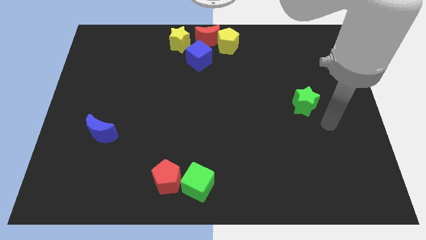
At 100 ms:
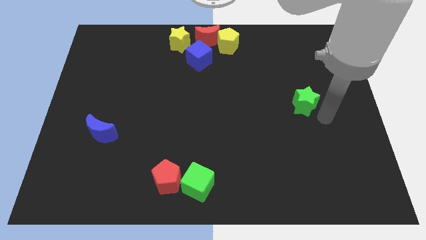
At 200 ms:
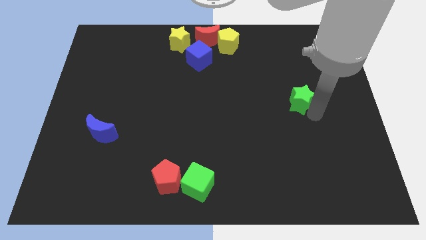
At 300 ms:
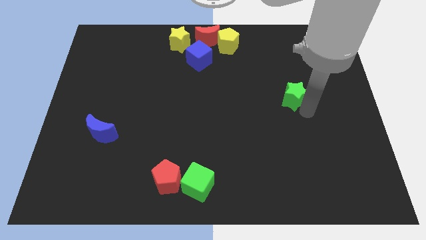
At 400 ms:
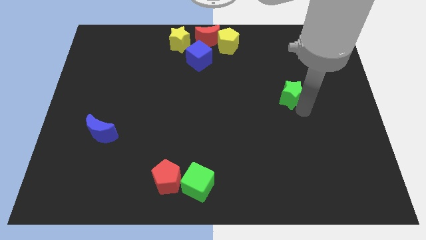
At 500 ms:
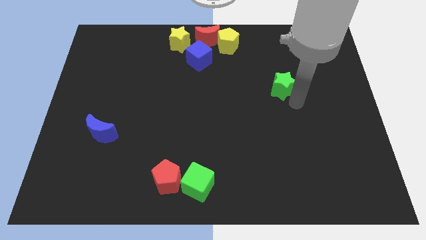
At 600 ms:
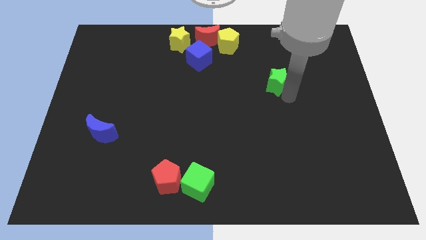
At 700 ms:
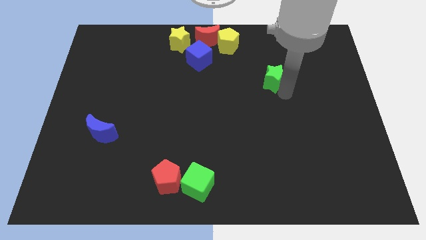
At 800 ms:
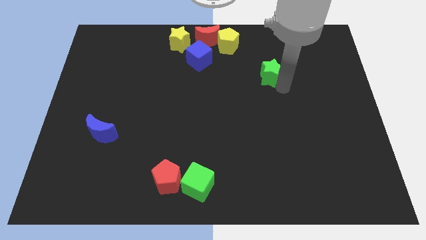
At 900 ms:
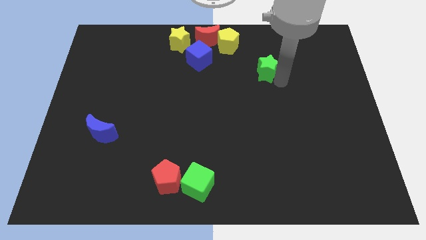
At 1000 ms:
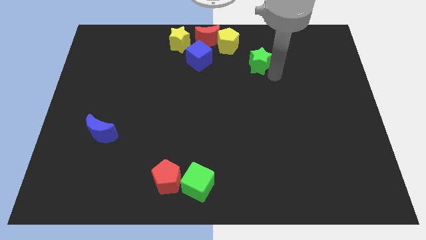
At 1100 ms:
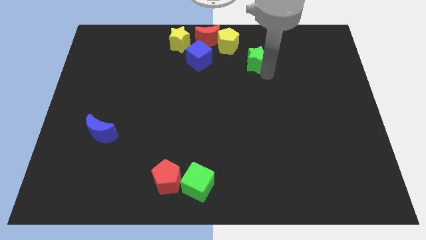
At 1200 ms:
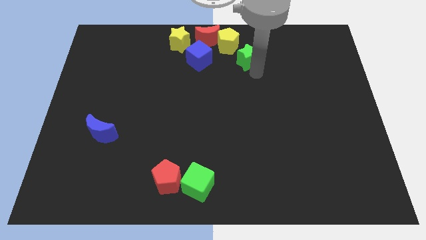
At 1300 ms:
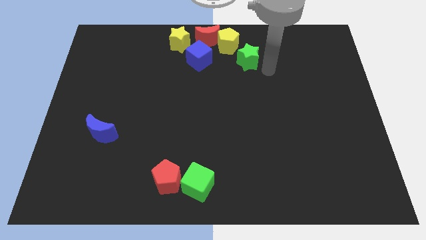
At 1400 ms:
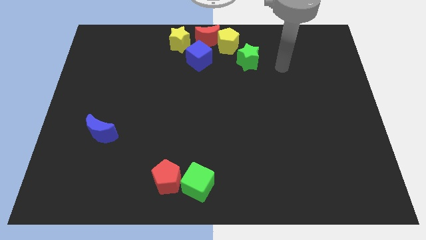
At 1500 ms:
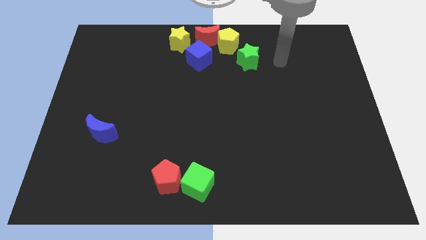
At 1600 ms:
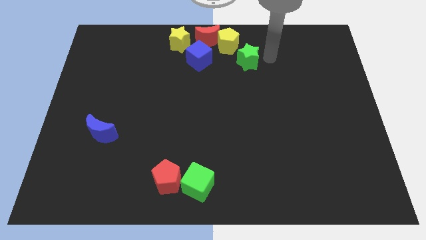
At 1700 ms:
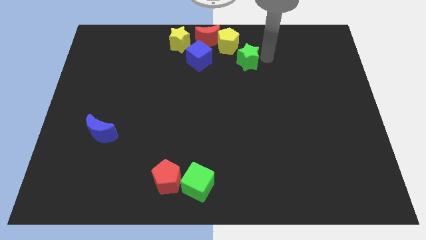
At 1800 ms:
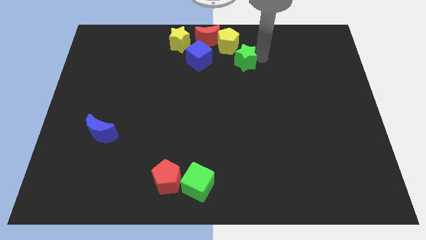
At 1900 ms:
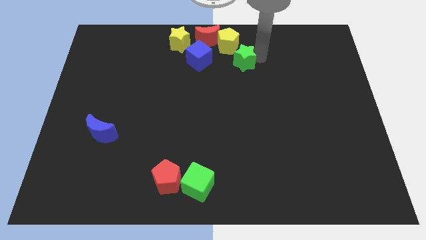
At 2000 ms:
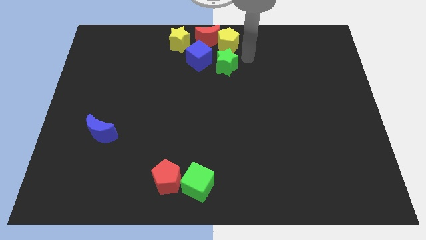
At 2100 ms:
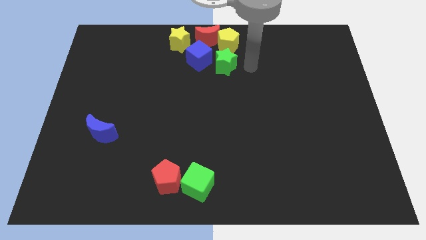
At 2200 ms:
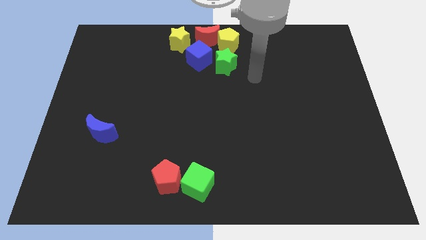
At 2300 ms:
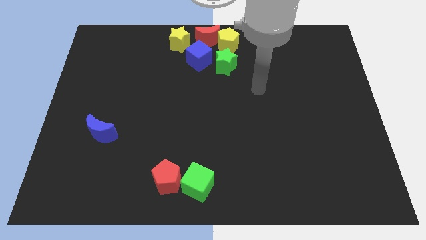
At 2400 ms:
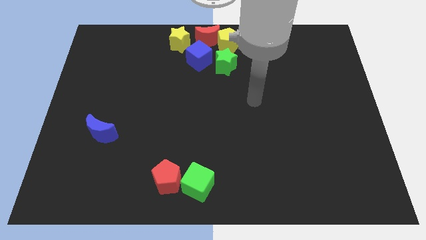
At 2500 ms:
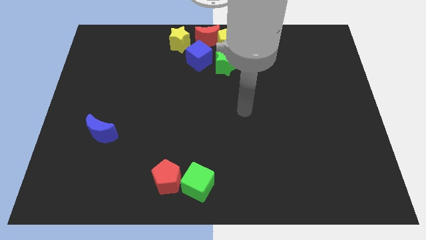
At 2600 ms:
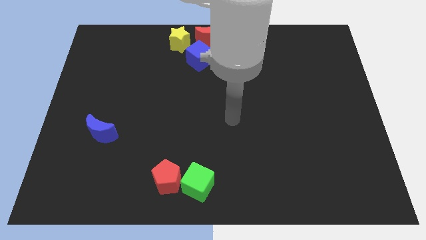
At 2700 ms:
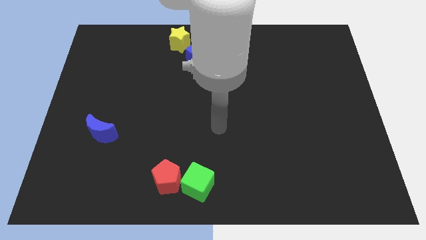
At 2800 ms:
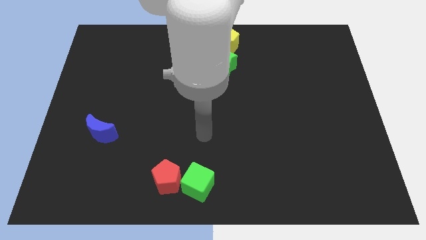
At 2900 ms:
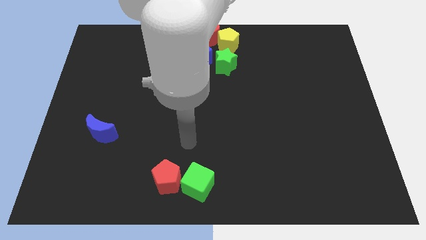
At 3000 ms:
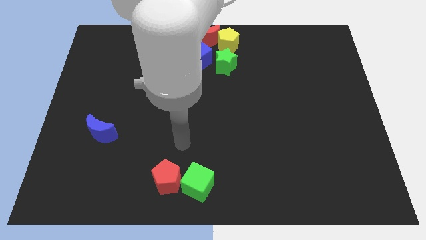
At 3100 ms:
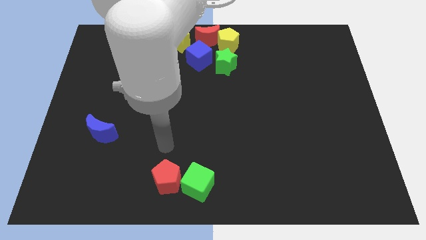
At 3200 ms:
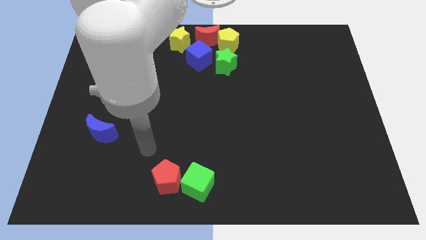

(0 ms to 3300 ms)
put green star on right side of blue cube

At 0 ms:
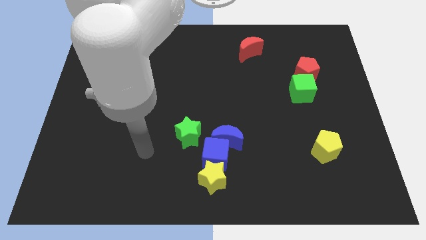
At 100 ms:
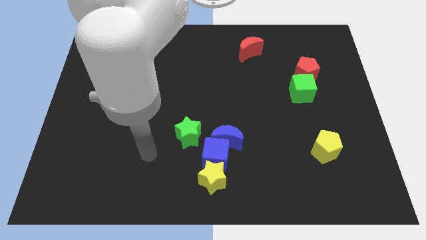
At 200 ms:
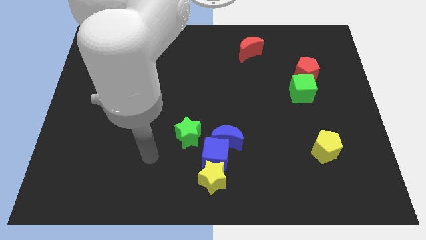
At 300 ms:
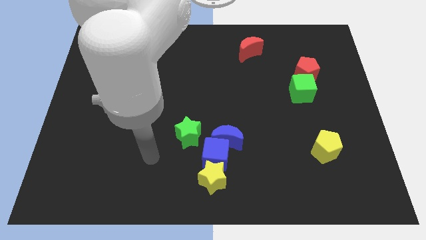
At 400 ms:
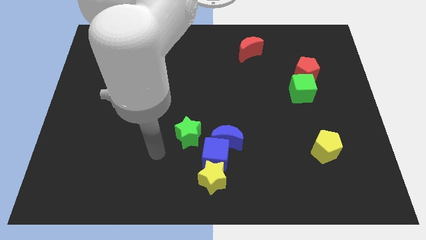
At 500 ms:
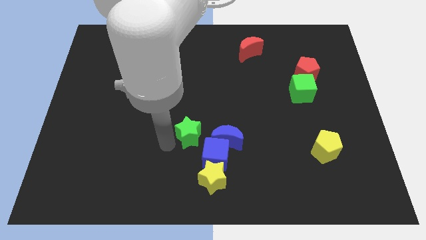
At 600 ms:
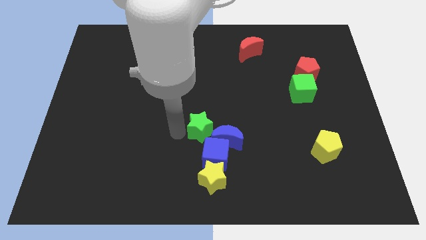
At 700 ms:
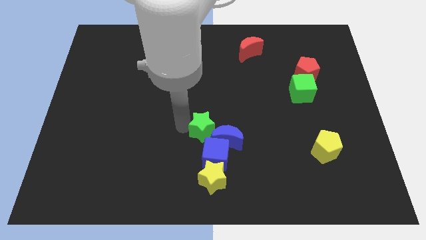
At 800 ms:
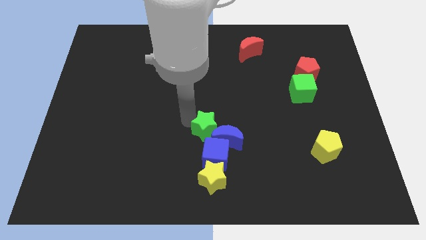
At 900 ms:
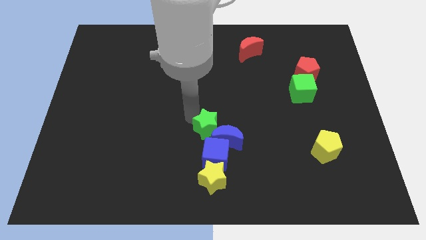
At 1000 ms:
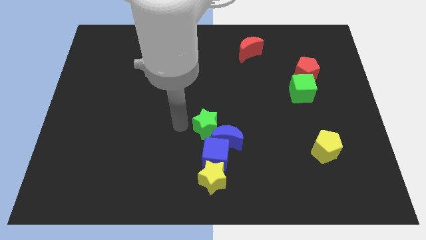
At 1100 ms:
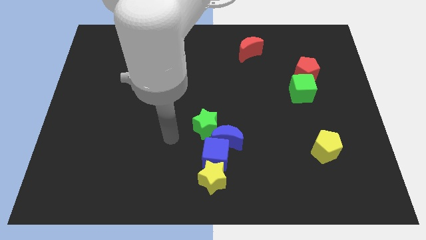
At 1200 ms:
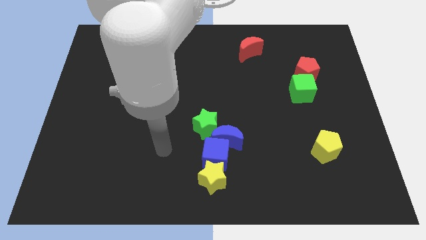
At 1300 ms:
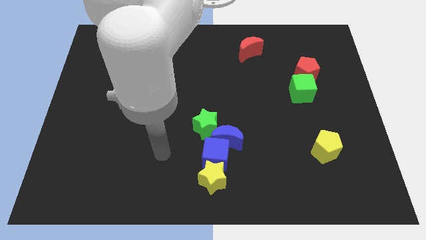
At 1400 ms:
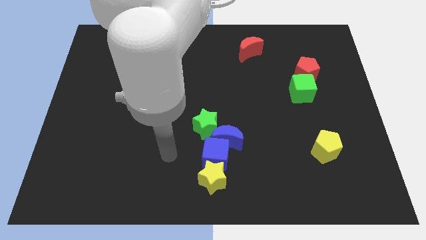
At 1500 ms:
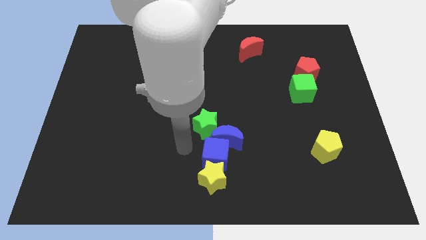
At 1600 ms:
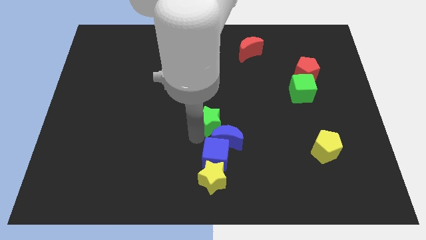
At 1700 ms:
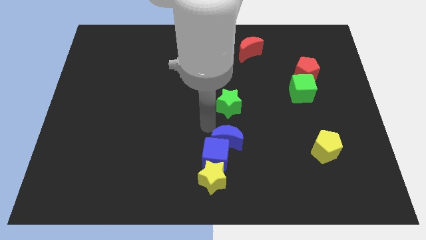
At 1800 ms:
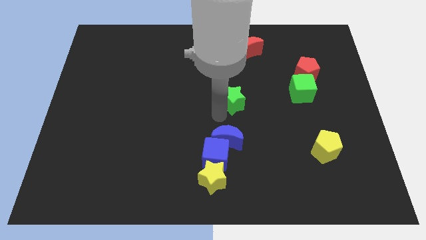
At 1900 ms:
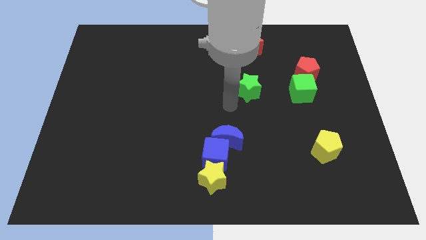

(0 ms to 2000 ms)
move the green star towards the top right side of the board

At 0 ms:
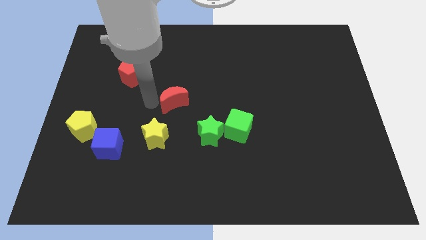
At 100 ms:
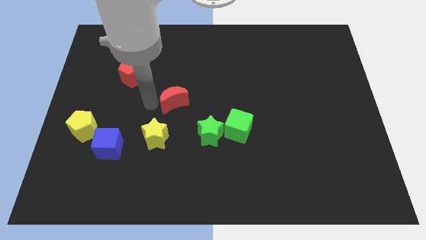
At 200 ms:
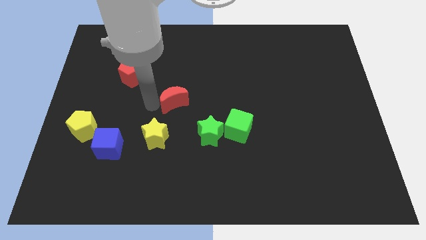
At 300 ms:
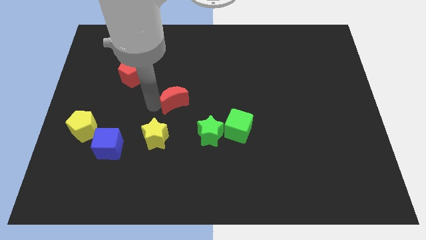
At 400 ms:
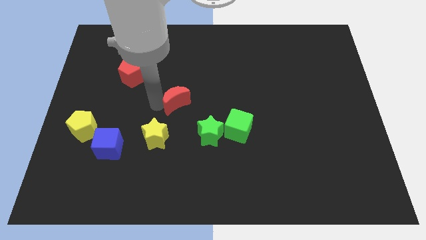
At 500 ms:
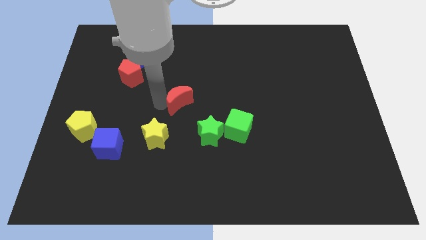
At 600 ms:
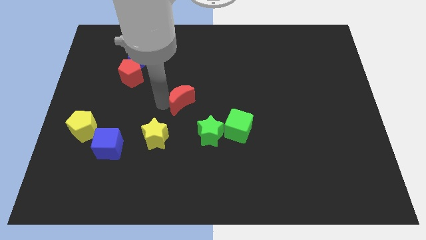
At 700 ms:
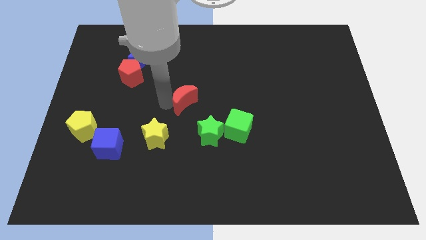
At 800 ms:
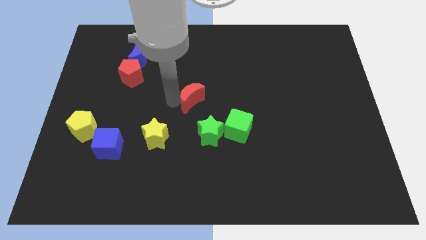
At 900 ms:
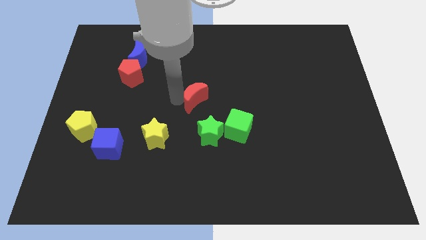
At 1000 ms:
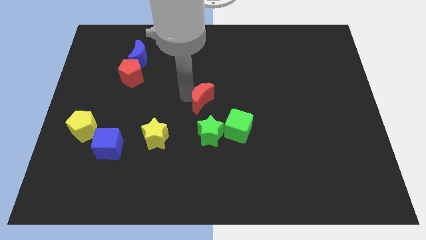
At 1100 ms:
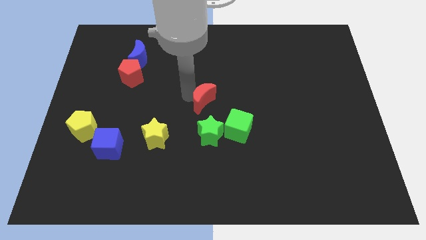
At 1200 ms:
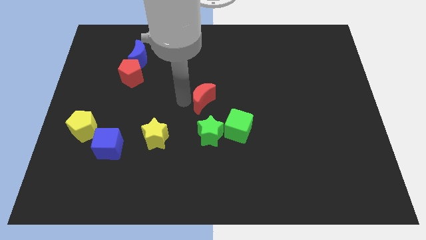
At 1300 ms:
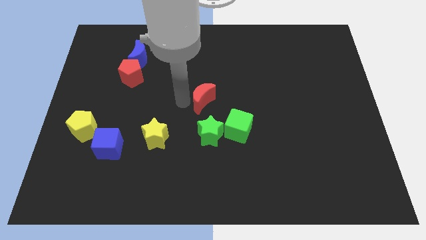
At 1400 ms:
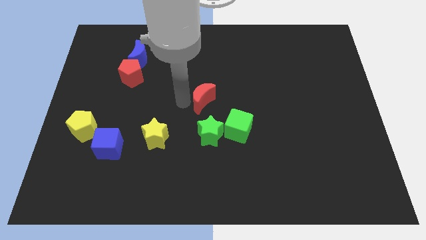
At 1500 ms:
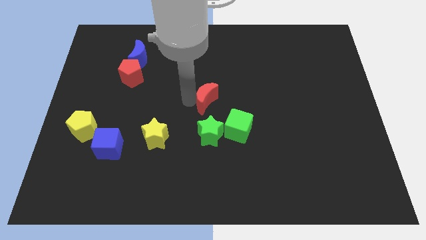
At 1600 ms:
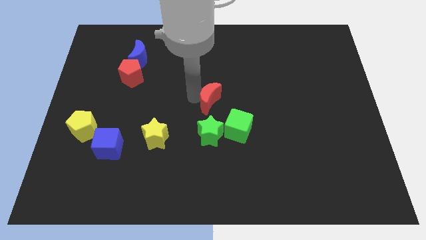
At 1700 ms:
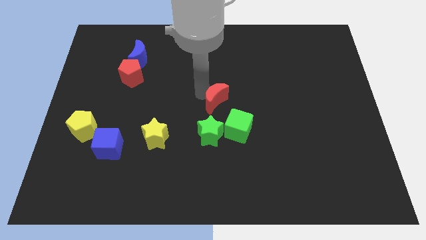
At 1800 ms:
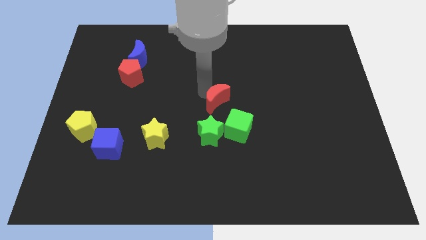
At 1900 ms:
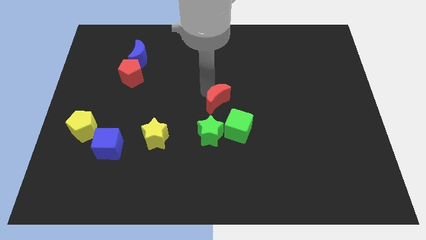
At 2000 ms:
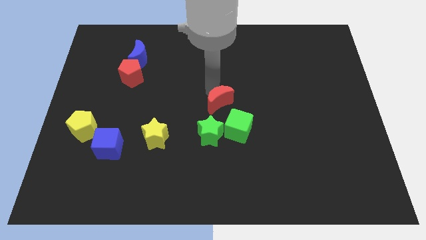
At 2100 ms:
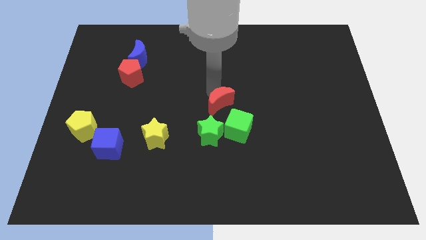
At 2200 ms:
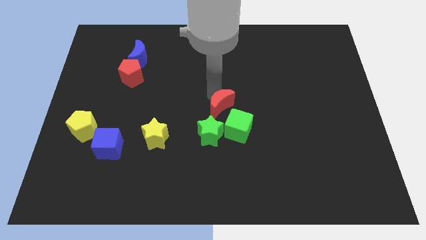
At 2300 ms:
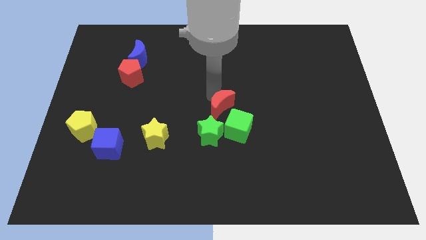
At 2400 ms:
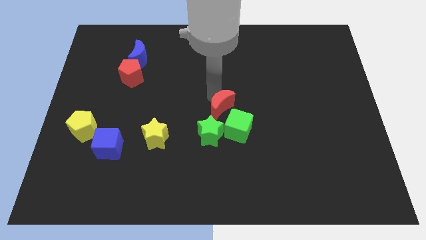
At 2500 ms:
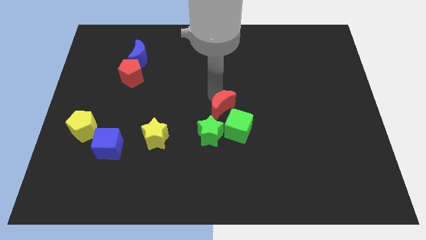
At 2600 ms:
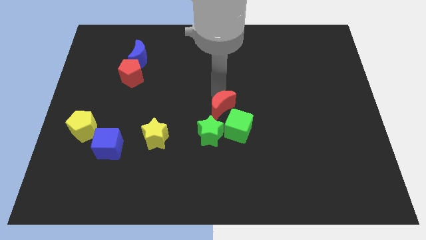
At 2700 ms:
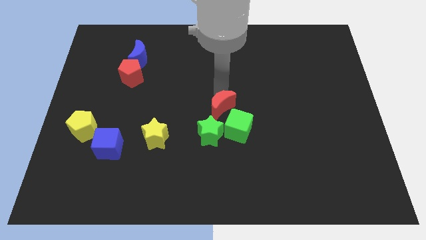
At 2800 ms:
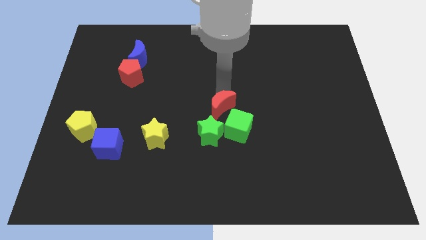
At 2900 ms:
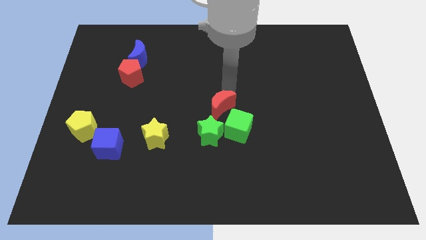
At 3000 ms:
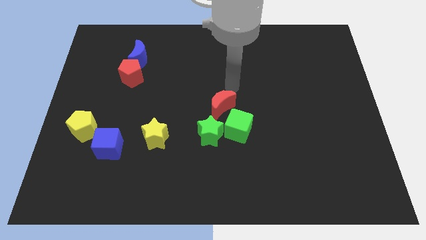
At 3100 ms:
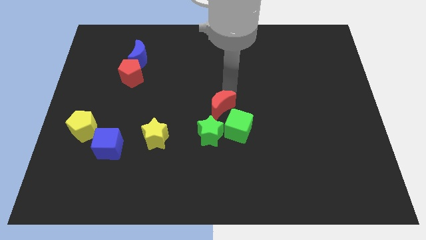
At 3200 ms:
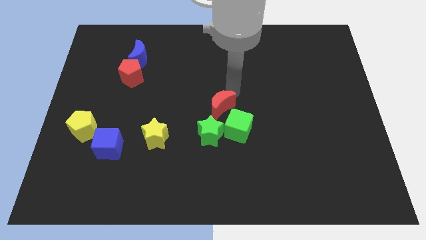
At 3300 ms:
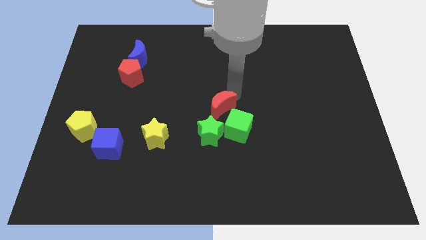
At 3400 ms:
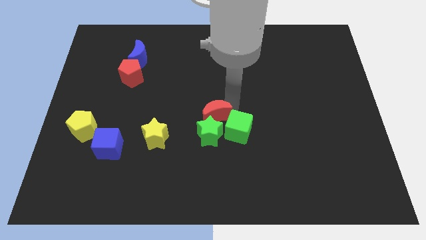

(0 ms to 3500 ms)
push the red crescent into the green star and the green cube

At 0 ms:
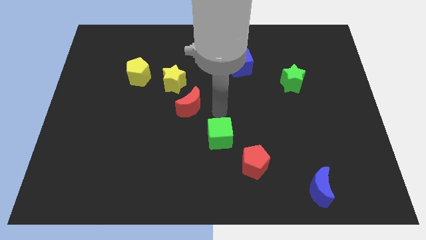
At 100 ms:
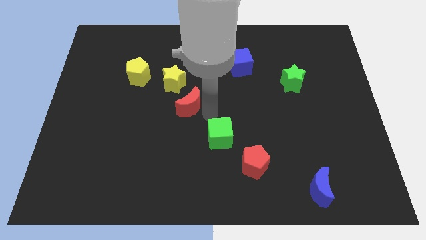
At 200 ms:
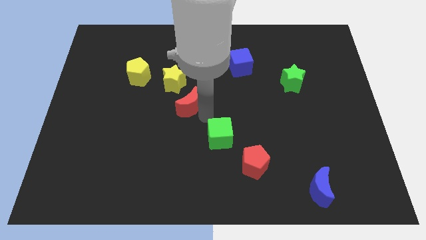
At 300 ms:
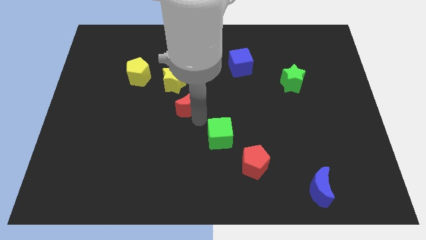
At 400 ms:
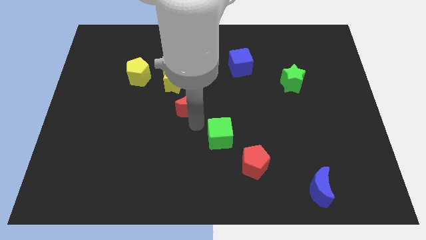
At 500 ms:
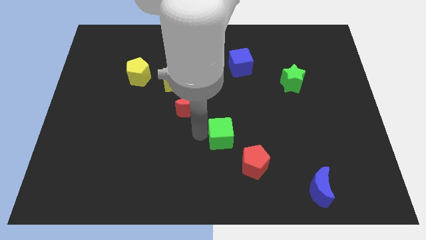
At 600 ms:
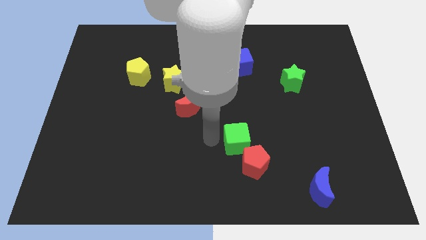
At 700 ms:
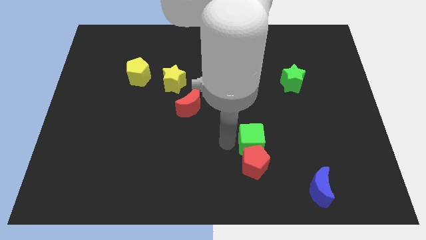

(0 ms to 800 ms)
place green cube on the top of red pentagon
